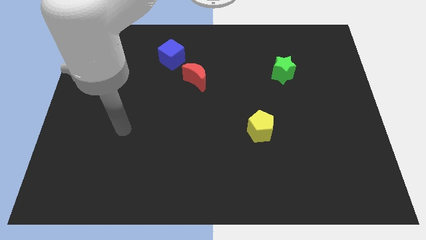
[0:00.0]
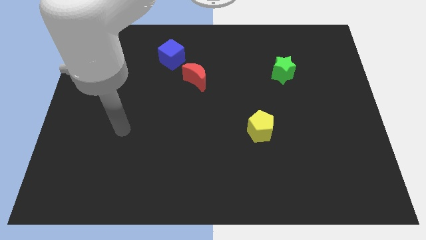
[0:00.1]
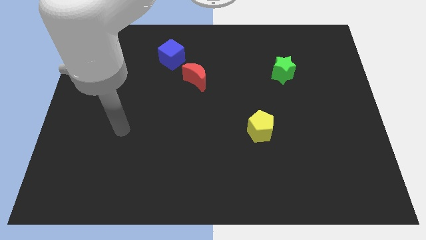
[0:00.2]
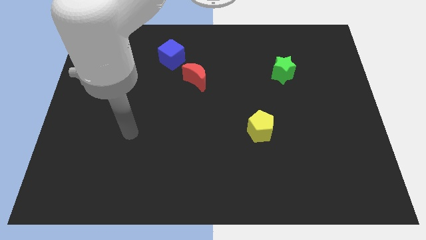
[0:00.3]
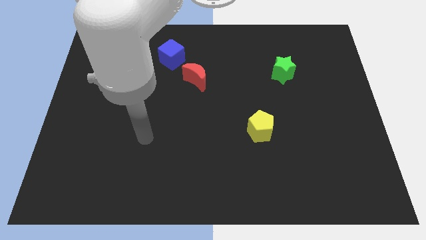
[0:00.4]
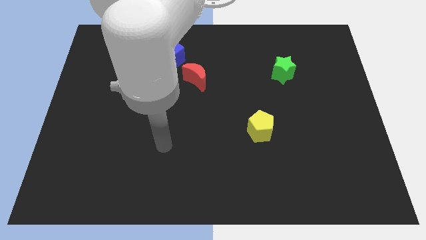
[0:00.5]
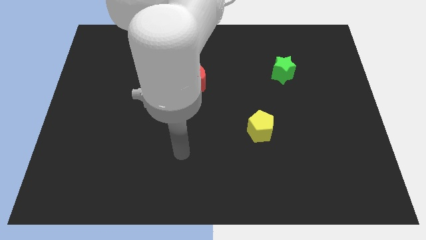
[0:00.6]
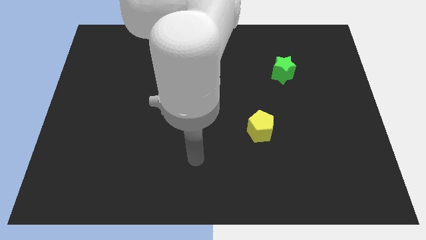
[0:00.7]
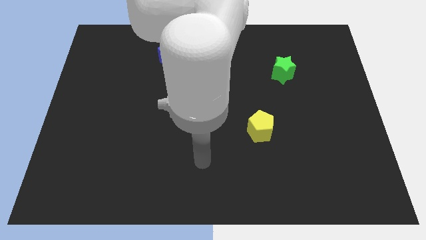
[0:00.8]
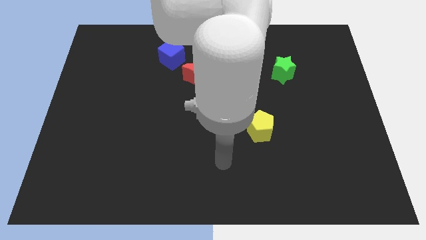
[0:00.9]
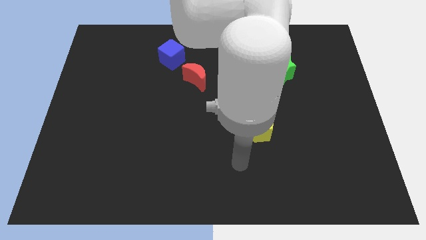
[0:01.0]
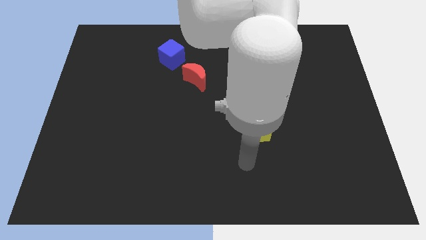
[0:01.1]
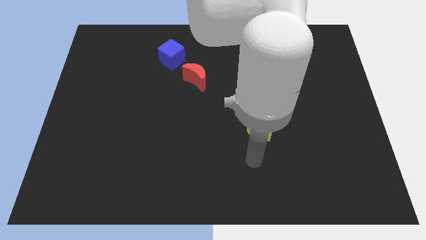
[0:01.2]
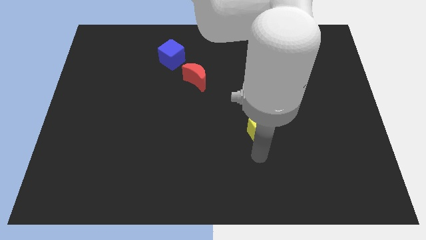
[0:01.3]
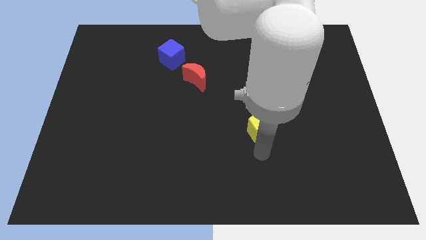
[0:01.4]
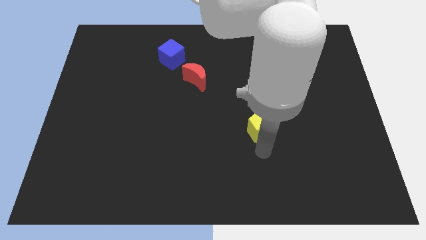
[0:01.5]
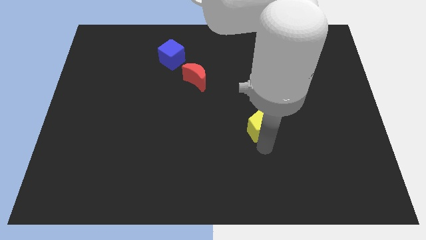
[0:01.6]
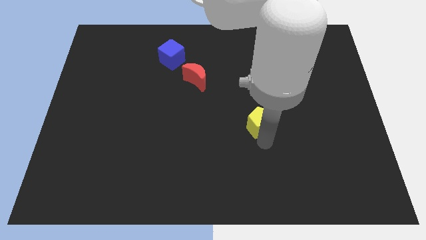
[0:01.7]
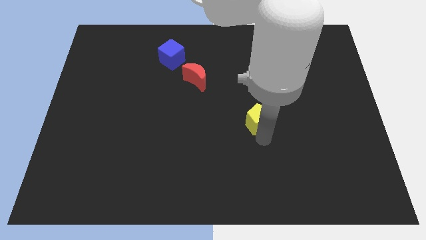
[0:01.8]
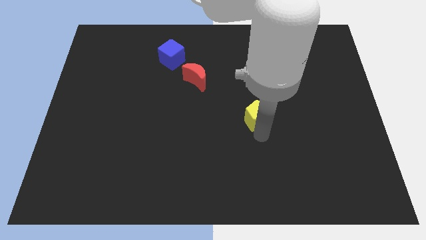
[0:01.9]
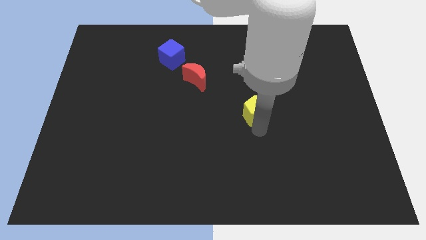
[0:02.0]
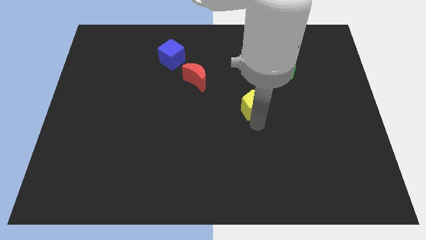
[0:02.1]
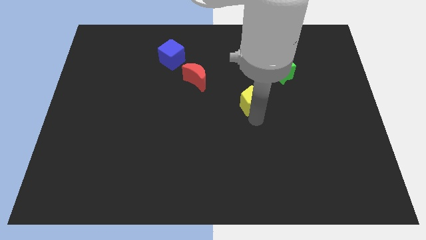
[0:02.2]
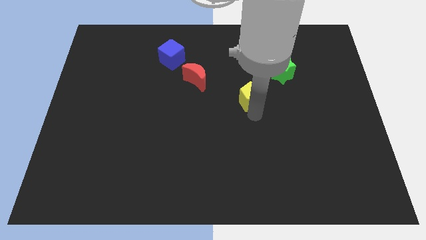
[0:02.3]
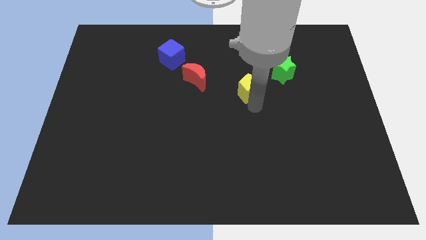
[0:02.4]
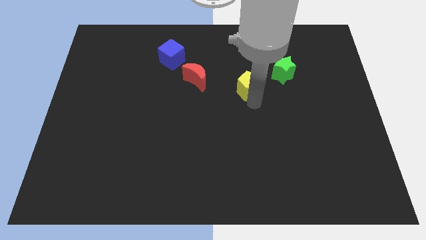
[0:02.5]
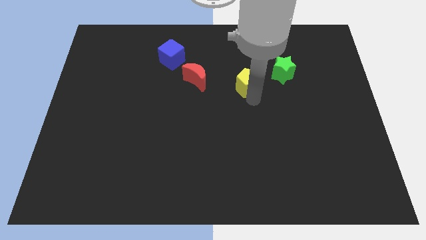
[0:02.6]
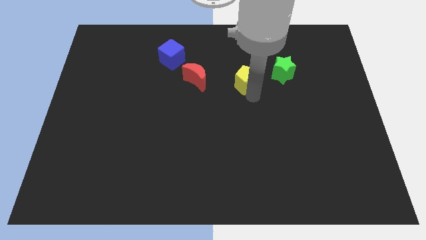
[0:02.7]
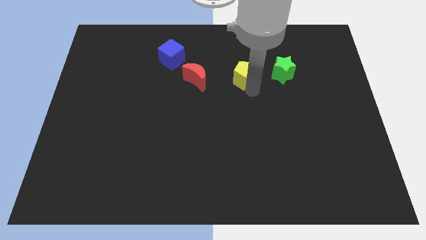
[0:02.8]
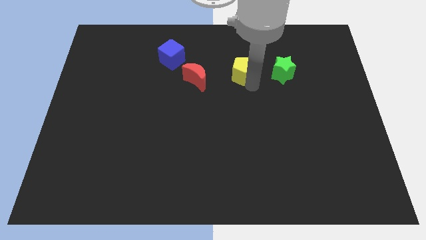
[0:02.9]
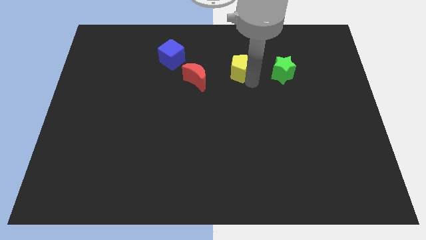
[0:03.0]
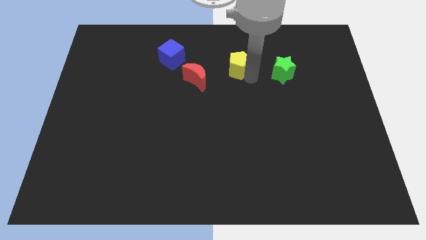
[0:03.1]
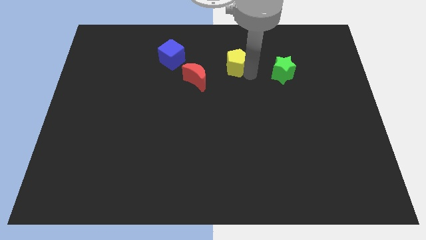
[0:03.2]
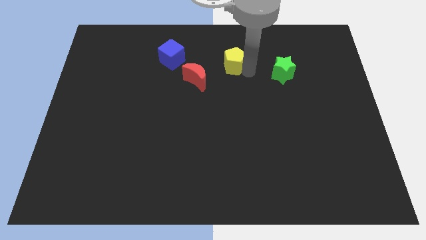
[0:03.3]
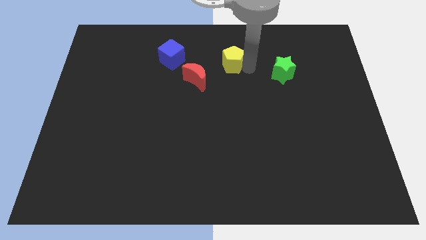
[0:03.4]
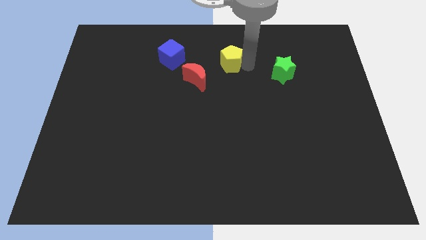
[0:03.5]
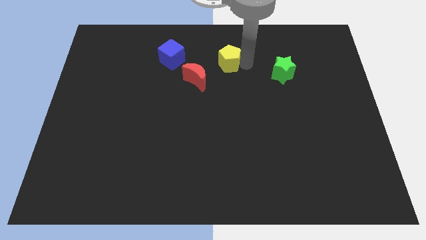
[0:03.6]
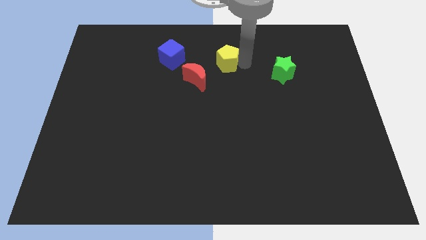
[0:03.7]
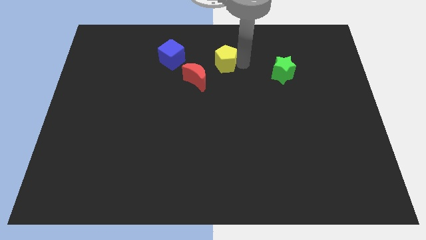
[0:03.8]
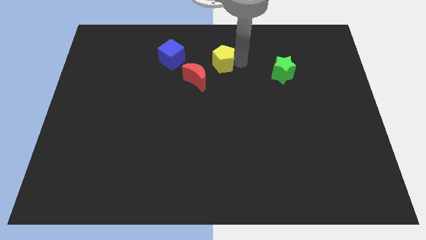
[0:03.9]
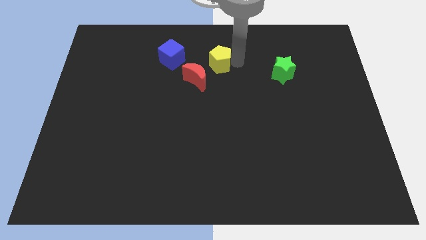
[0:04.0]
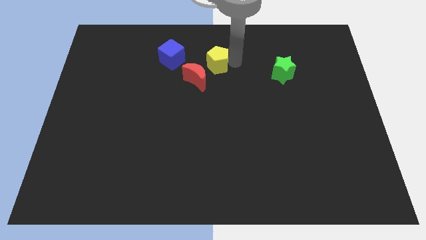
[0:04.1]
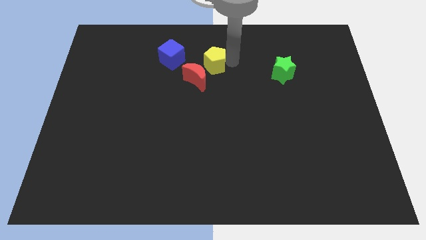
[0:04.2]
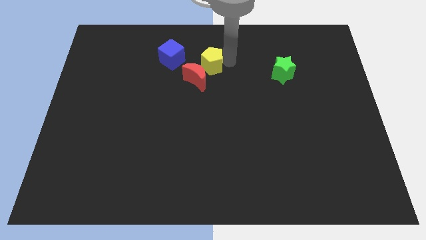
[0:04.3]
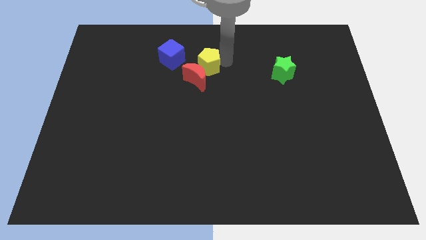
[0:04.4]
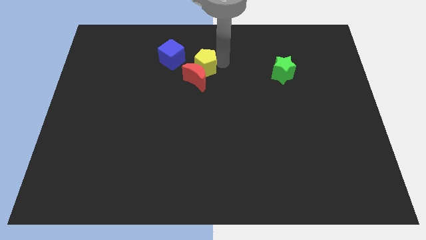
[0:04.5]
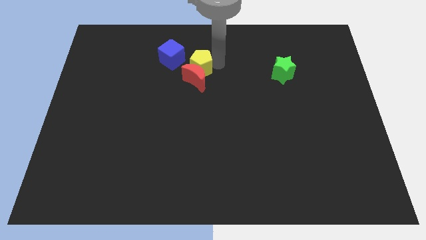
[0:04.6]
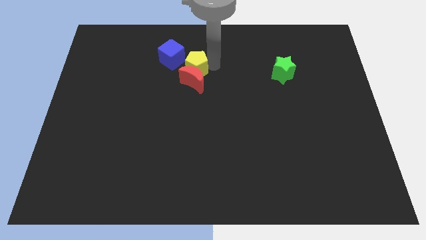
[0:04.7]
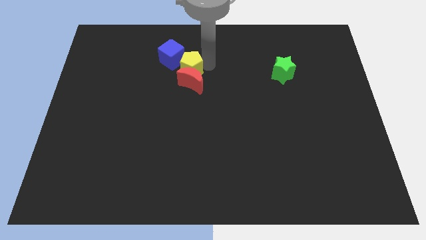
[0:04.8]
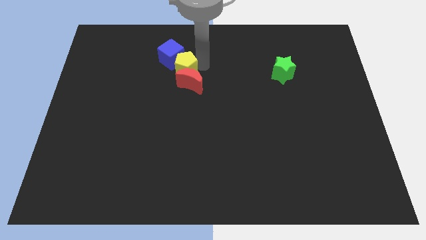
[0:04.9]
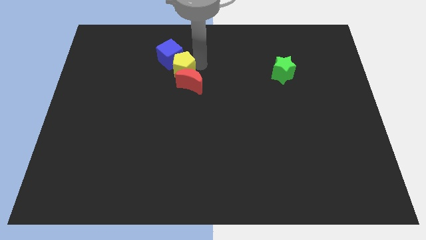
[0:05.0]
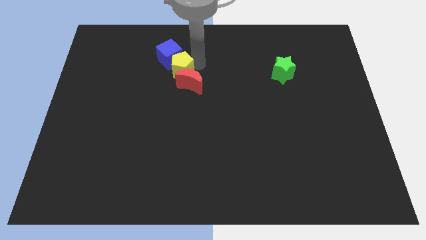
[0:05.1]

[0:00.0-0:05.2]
move the yellow block to the cube

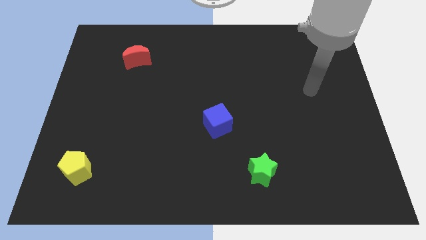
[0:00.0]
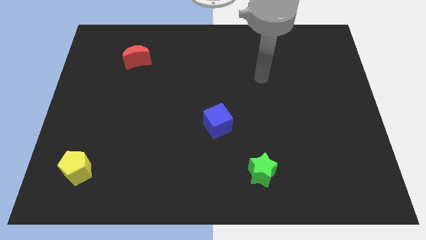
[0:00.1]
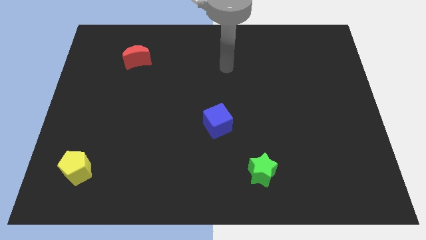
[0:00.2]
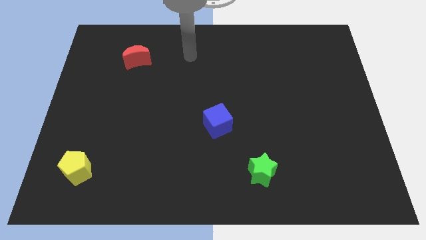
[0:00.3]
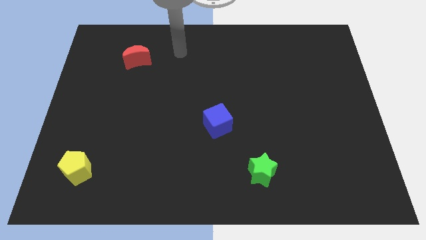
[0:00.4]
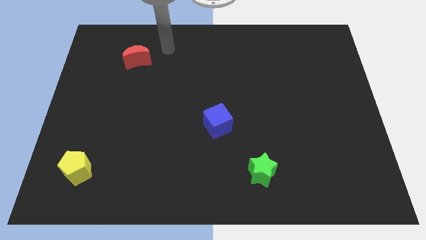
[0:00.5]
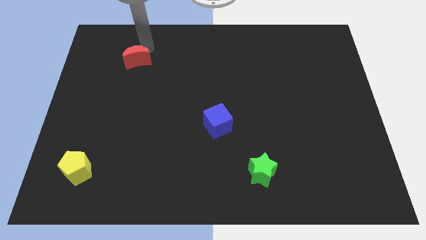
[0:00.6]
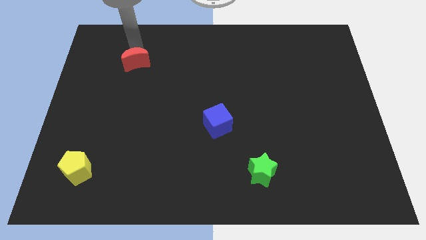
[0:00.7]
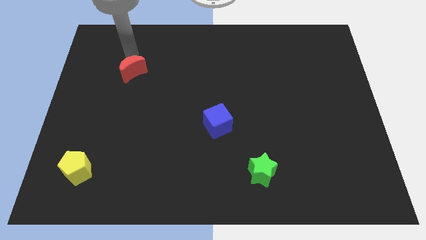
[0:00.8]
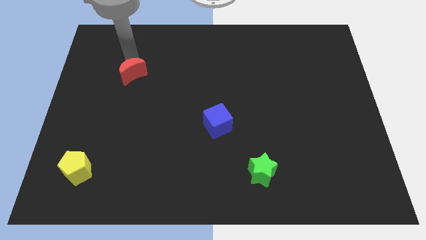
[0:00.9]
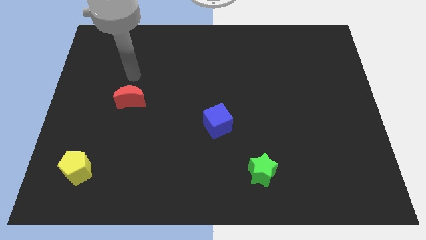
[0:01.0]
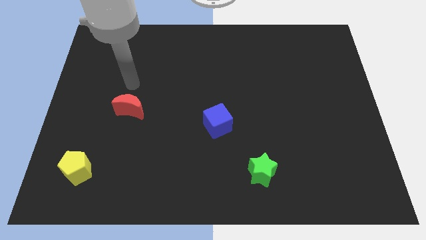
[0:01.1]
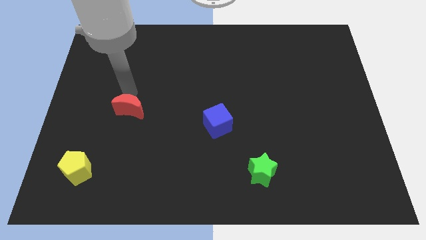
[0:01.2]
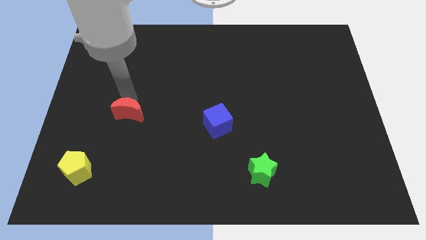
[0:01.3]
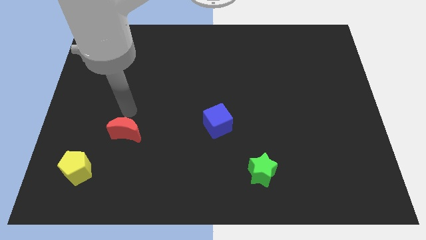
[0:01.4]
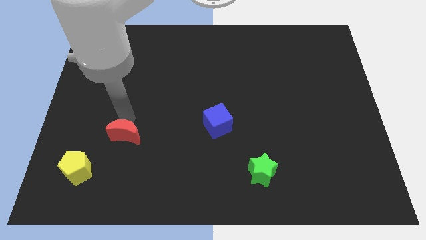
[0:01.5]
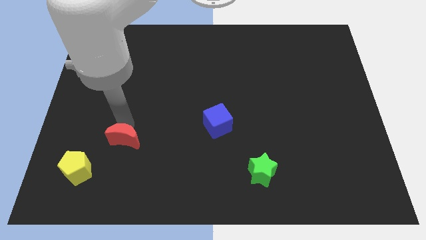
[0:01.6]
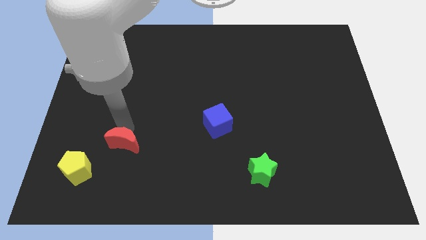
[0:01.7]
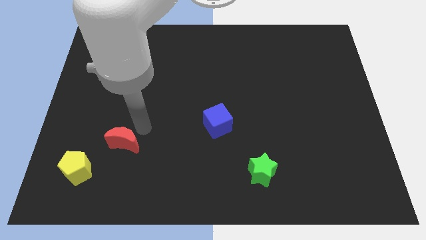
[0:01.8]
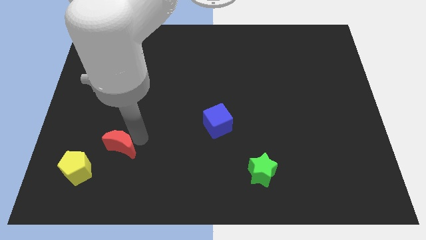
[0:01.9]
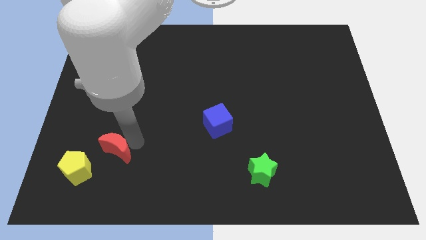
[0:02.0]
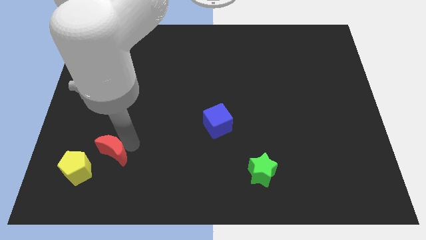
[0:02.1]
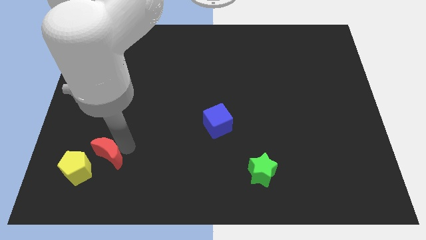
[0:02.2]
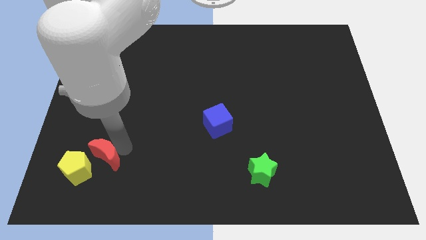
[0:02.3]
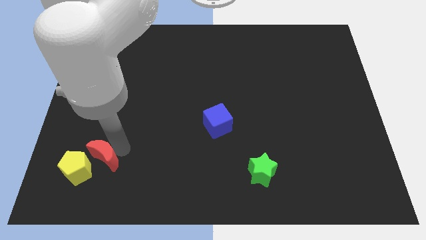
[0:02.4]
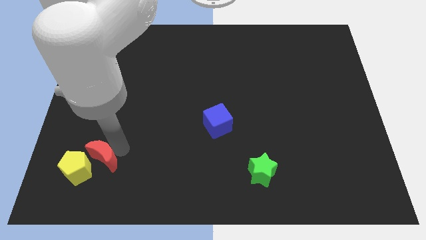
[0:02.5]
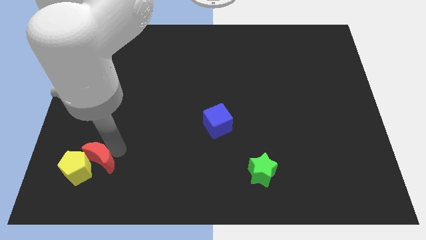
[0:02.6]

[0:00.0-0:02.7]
put the red block towards the pentagon

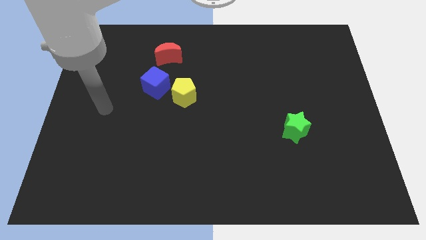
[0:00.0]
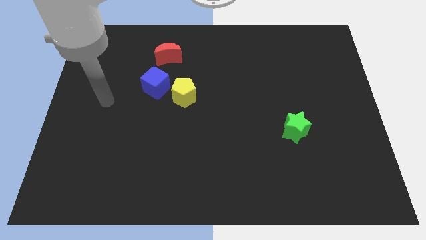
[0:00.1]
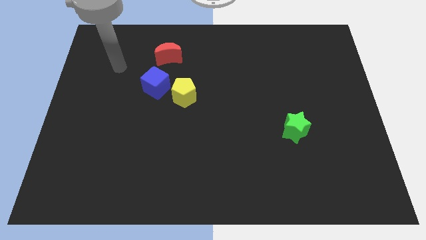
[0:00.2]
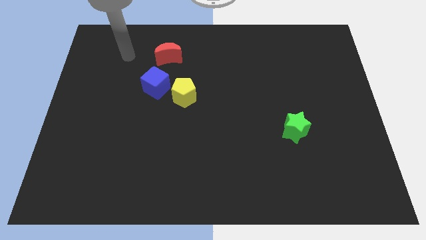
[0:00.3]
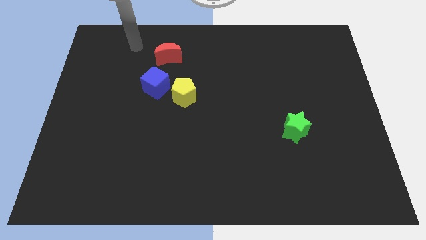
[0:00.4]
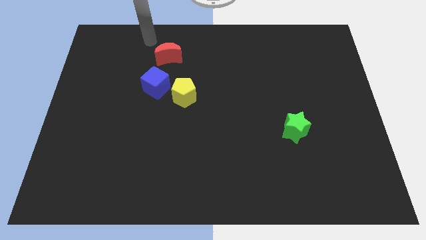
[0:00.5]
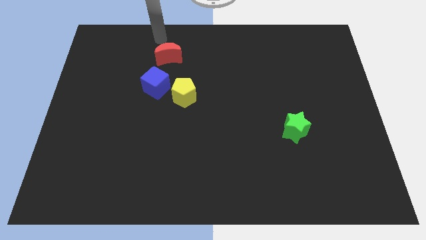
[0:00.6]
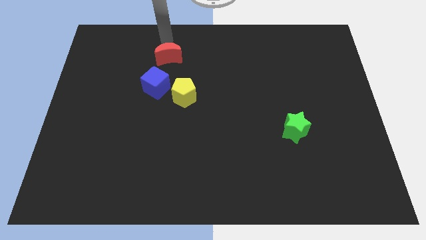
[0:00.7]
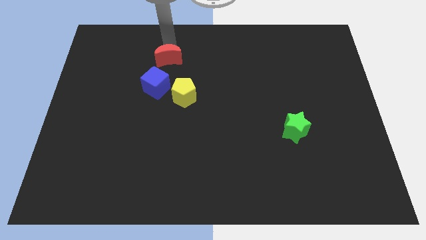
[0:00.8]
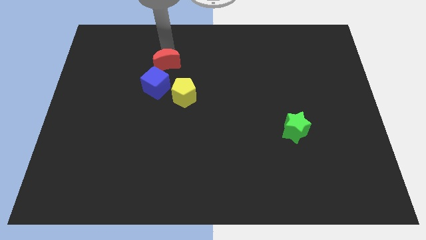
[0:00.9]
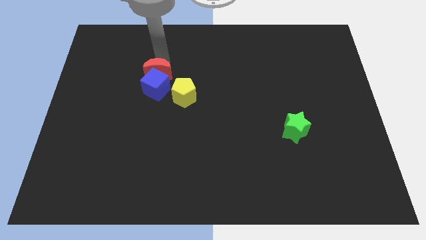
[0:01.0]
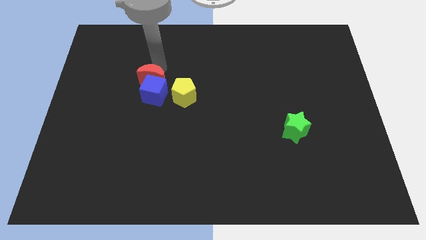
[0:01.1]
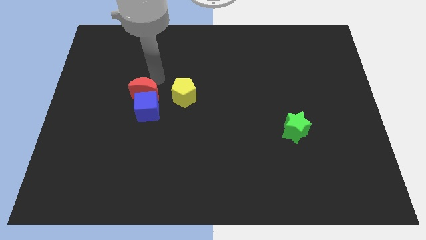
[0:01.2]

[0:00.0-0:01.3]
put the red moon to the blue cube
